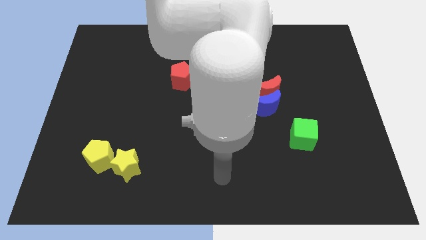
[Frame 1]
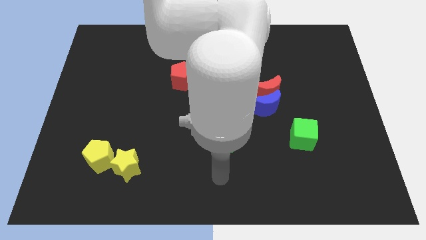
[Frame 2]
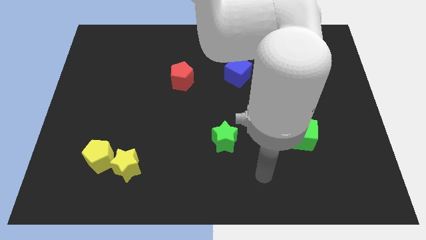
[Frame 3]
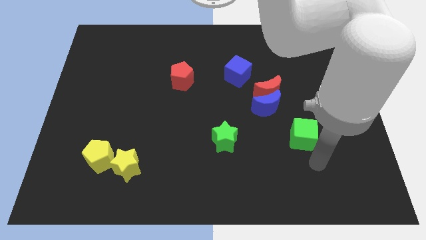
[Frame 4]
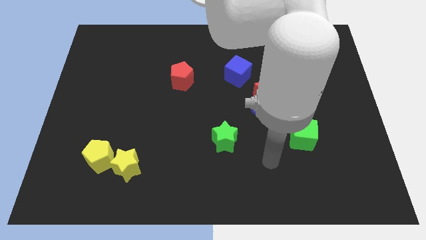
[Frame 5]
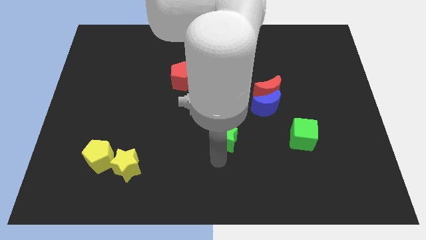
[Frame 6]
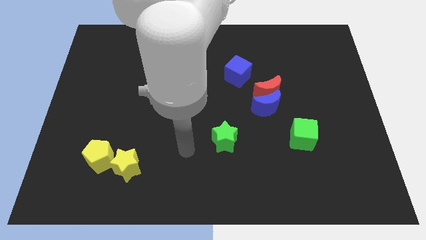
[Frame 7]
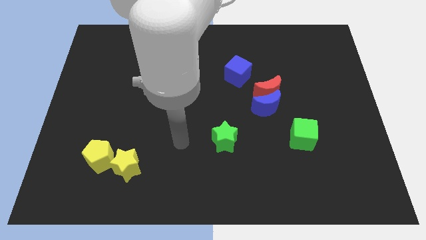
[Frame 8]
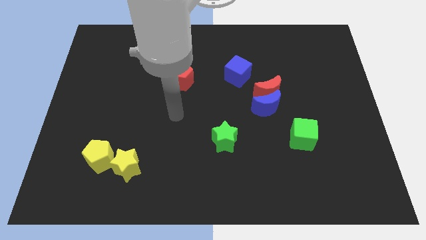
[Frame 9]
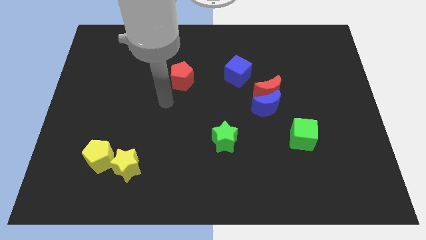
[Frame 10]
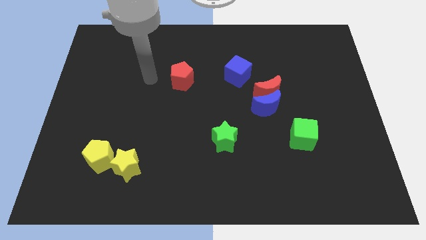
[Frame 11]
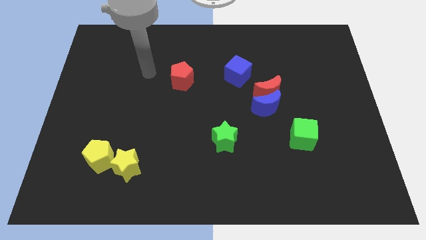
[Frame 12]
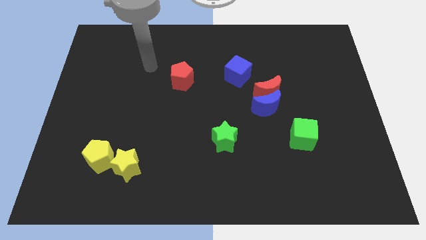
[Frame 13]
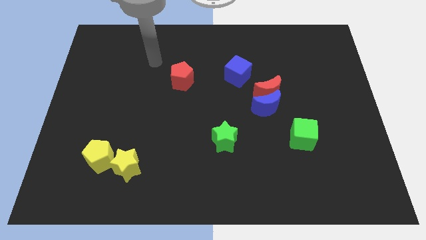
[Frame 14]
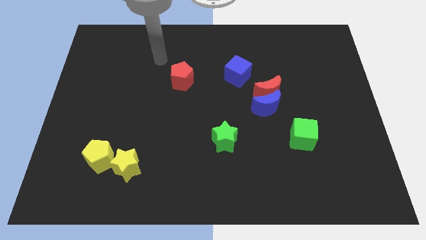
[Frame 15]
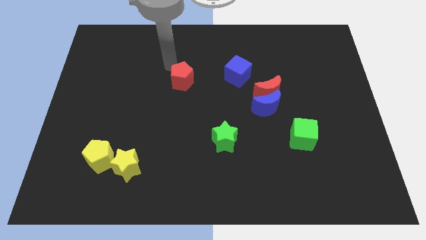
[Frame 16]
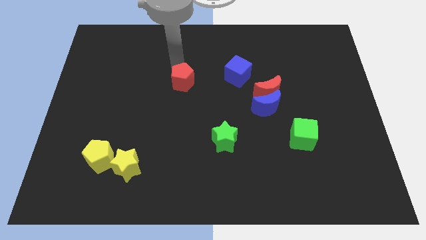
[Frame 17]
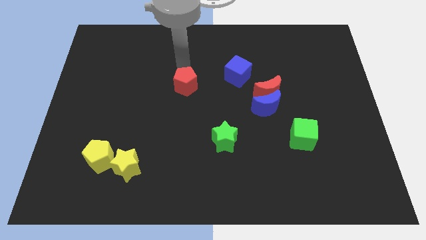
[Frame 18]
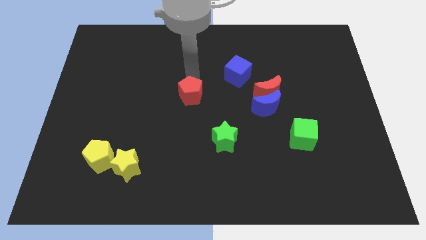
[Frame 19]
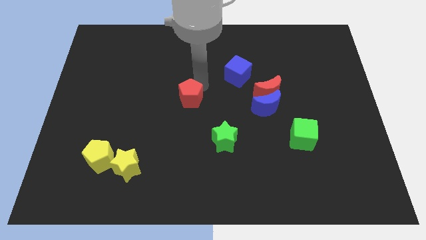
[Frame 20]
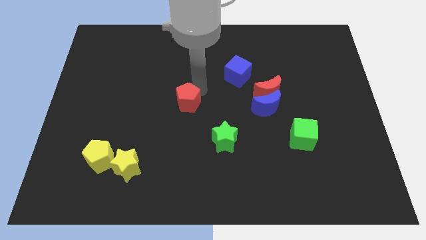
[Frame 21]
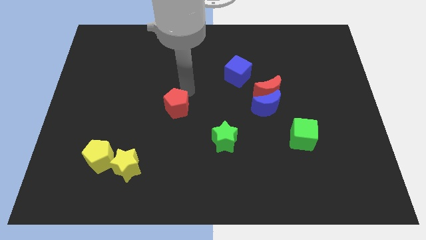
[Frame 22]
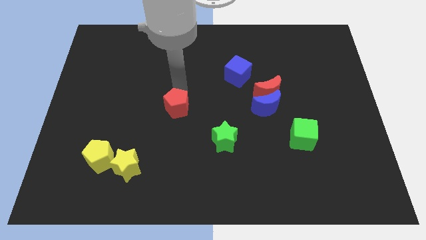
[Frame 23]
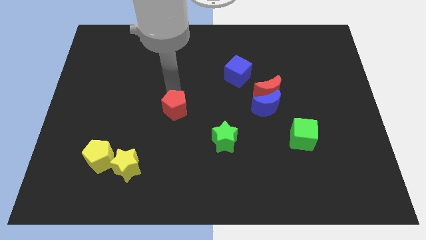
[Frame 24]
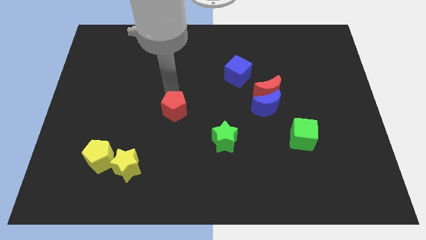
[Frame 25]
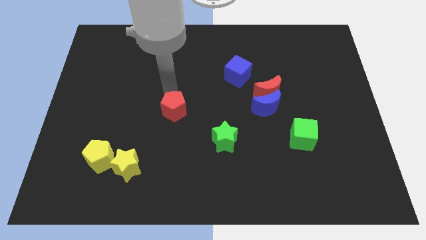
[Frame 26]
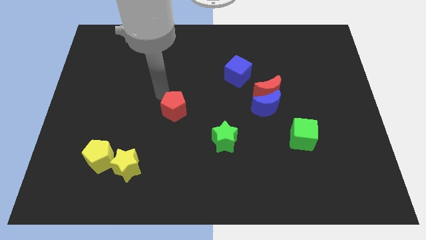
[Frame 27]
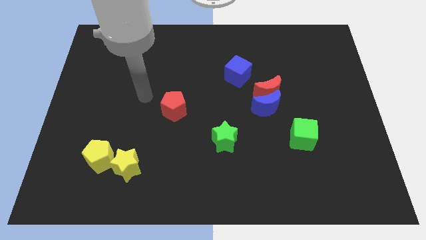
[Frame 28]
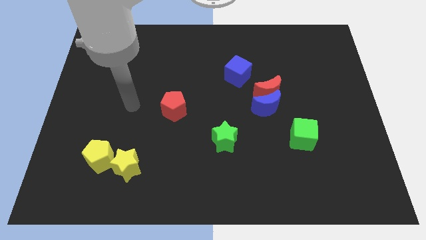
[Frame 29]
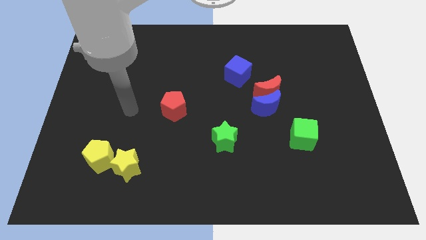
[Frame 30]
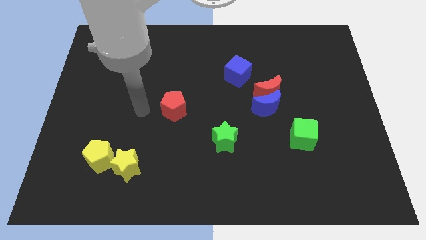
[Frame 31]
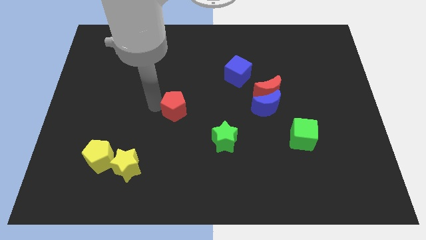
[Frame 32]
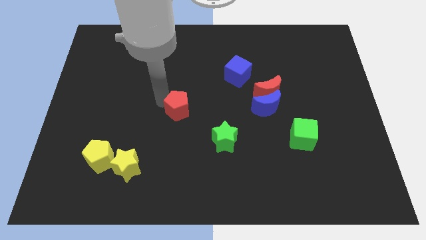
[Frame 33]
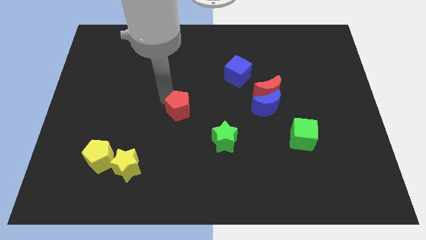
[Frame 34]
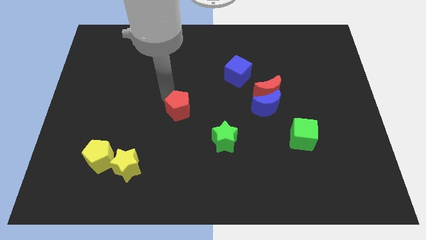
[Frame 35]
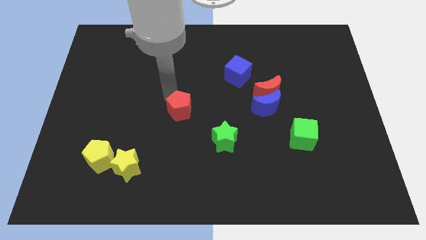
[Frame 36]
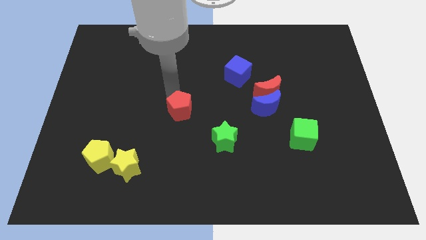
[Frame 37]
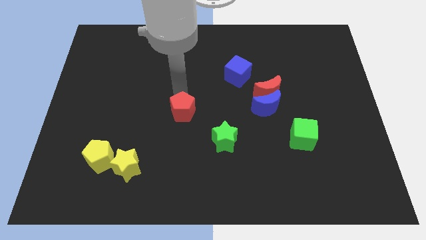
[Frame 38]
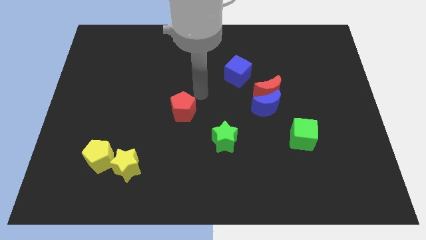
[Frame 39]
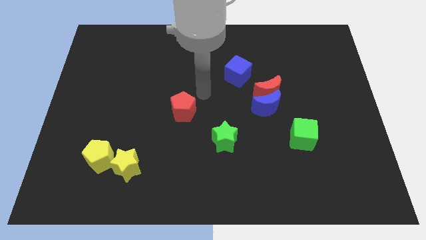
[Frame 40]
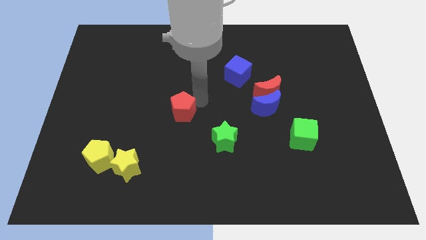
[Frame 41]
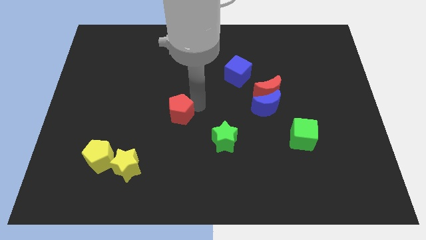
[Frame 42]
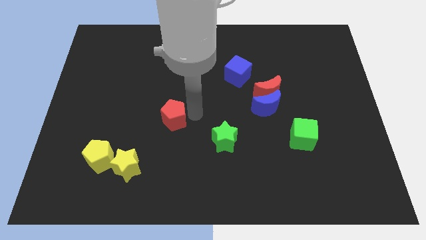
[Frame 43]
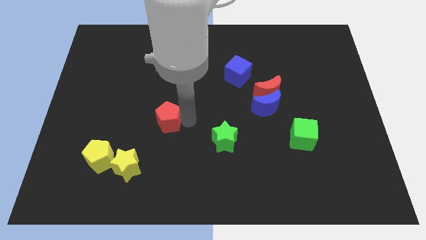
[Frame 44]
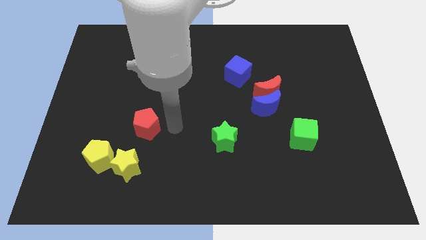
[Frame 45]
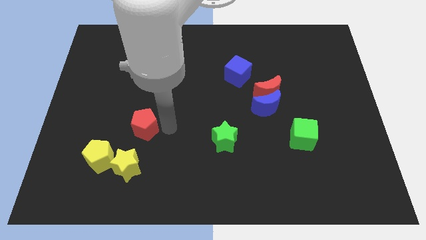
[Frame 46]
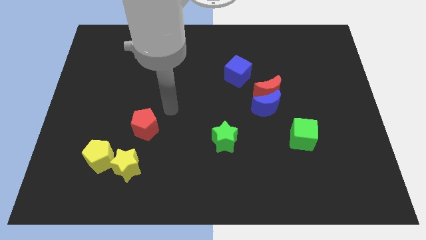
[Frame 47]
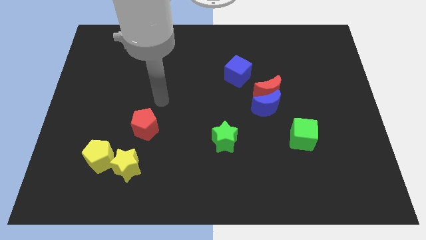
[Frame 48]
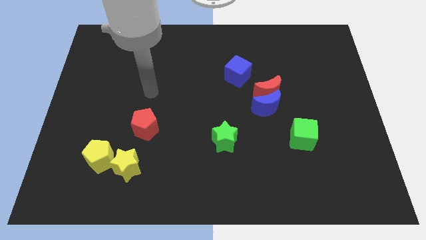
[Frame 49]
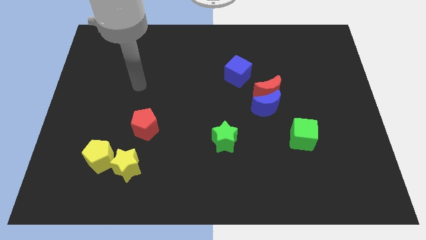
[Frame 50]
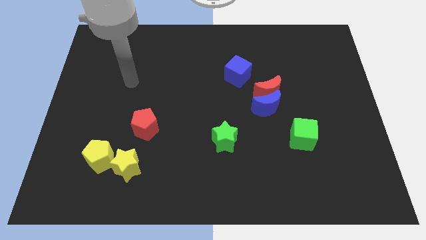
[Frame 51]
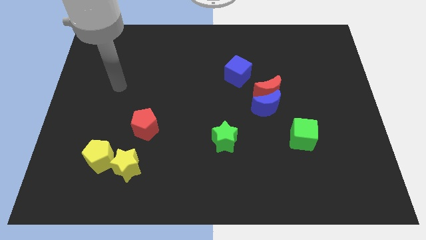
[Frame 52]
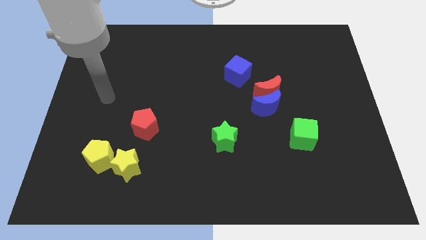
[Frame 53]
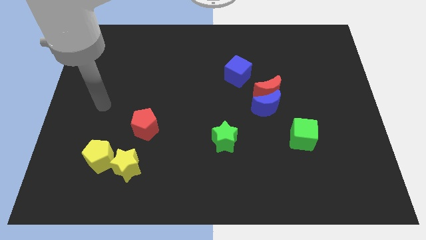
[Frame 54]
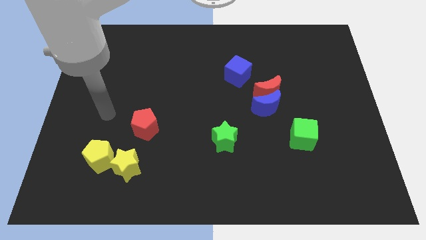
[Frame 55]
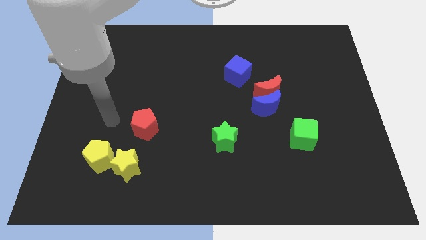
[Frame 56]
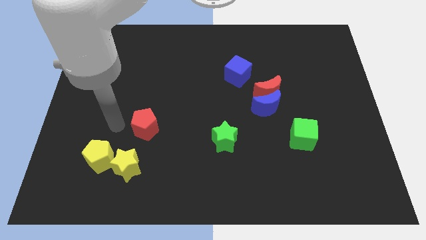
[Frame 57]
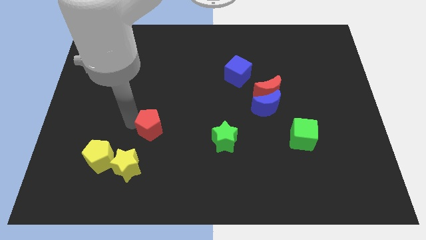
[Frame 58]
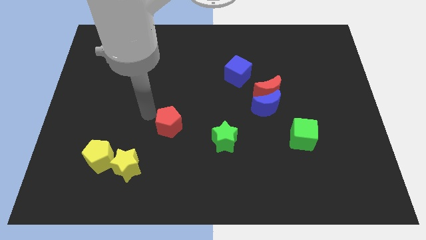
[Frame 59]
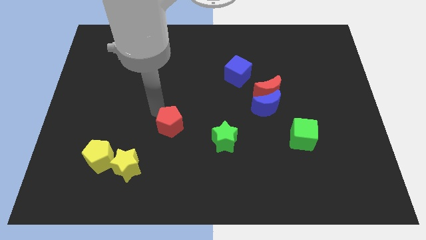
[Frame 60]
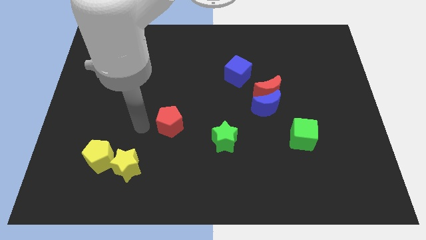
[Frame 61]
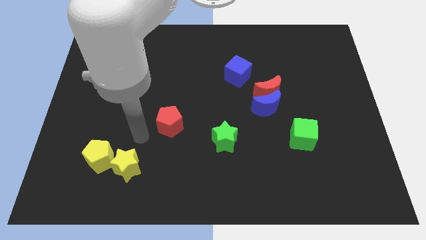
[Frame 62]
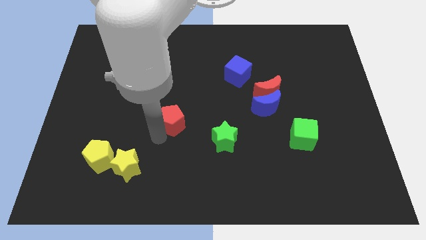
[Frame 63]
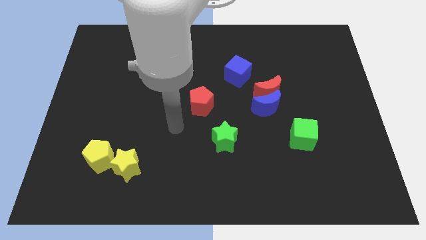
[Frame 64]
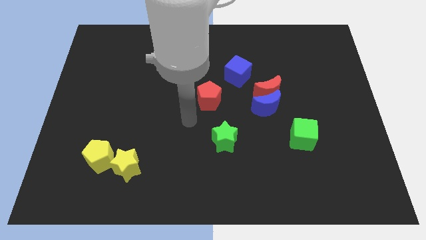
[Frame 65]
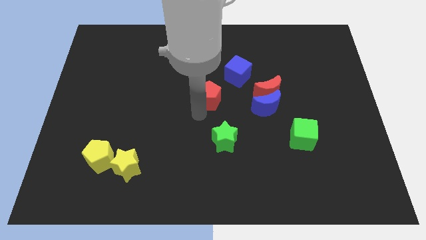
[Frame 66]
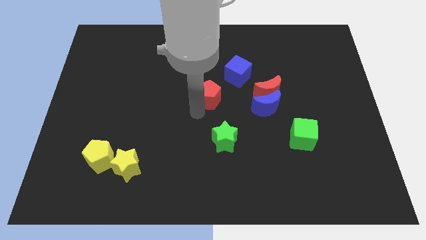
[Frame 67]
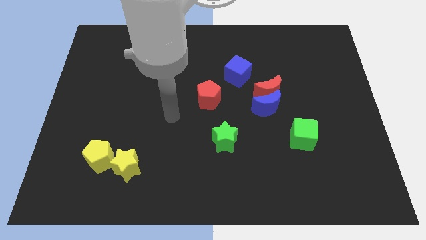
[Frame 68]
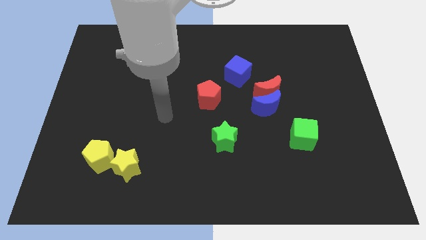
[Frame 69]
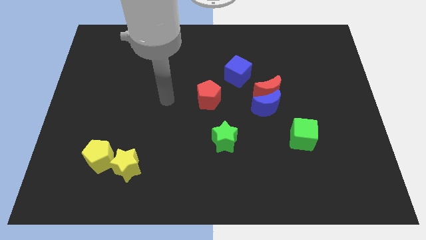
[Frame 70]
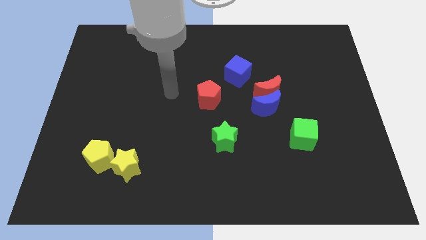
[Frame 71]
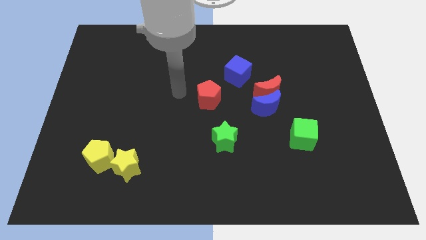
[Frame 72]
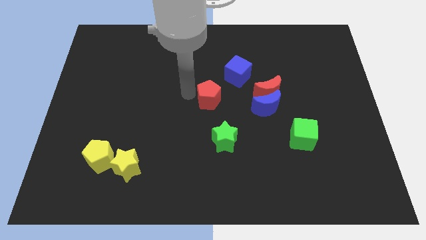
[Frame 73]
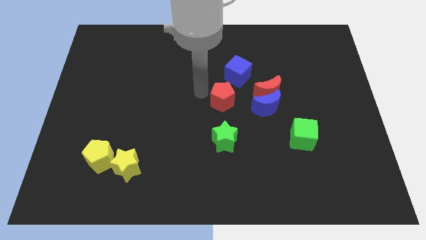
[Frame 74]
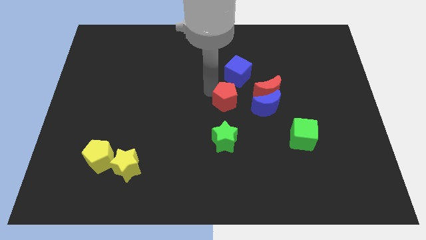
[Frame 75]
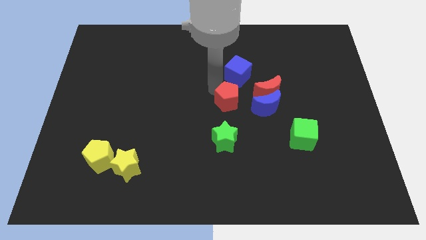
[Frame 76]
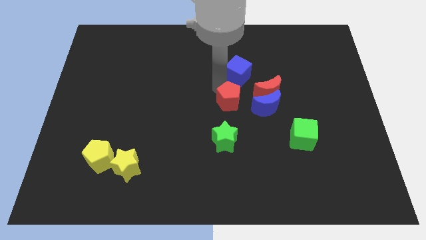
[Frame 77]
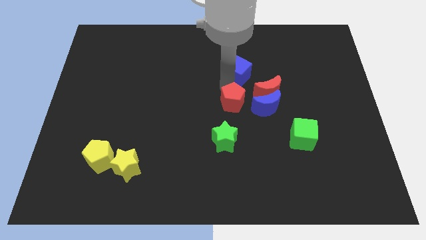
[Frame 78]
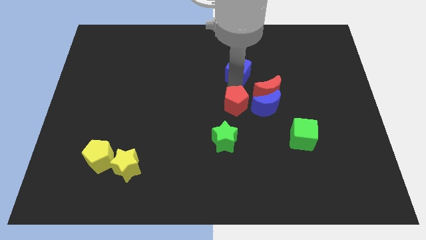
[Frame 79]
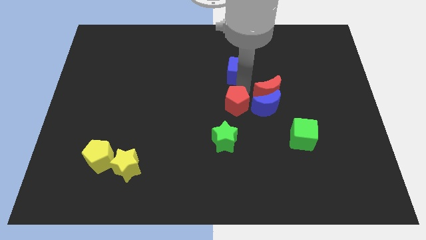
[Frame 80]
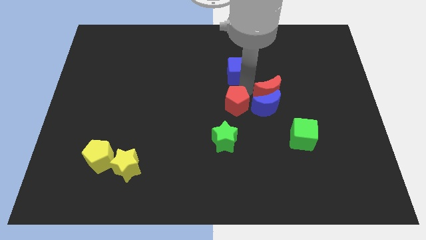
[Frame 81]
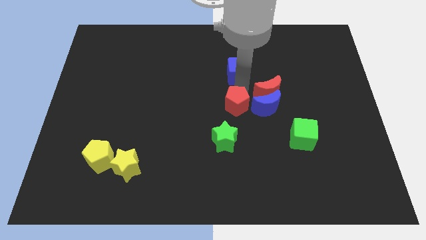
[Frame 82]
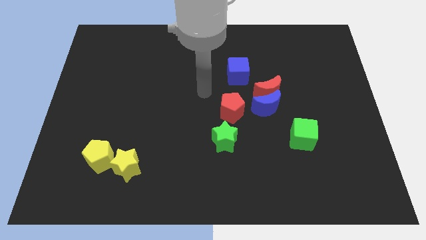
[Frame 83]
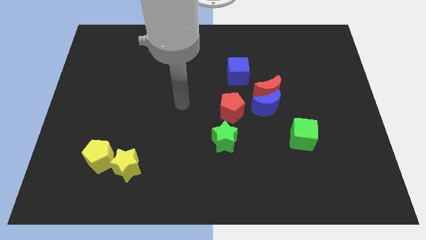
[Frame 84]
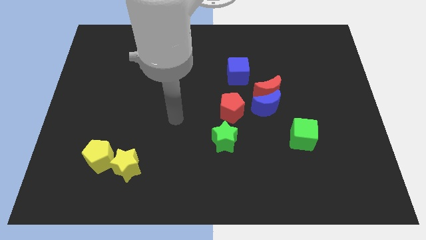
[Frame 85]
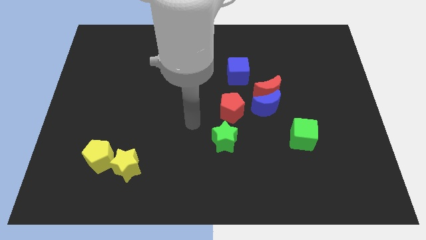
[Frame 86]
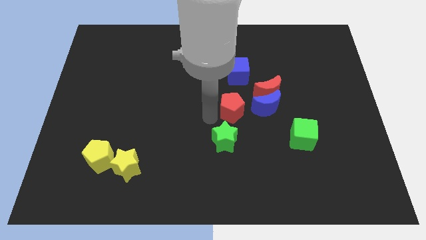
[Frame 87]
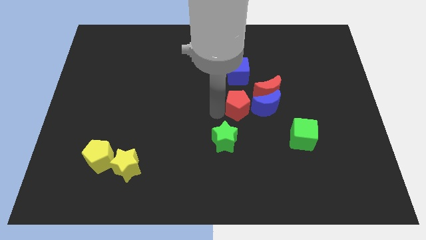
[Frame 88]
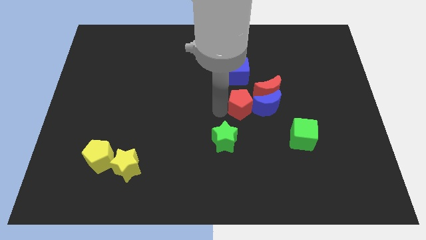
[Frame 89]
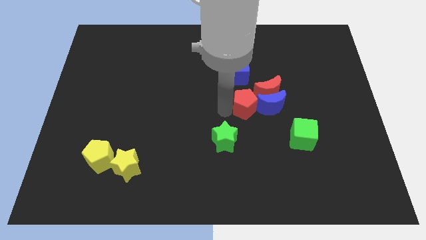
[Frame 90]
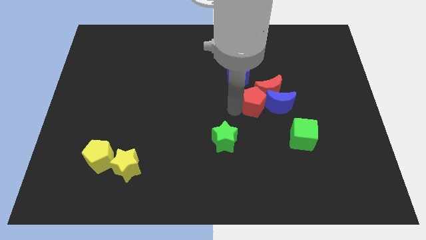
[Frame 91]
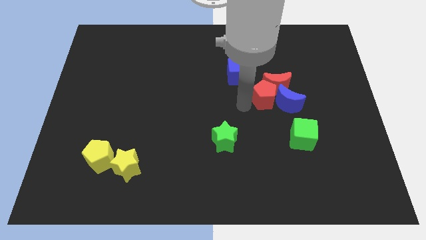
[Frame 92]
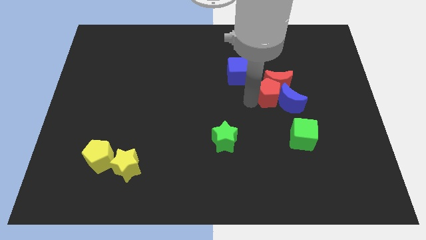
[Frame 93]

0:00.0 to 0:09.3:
push the red pentagon to the red moon
